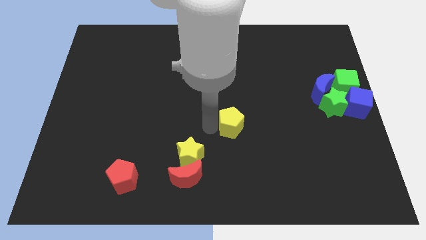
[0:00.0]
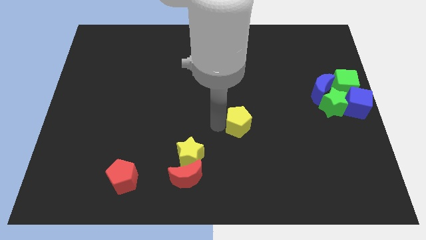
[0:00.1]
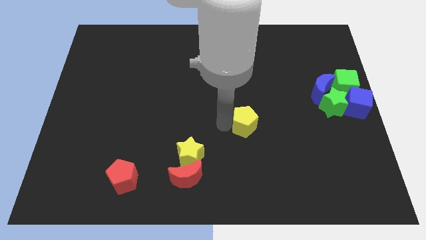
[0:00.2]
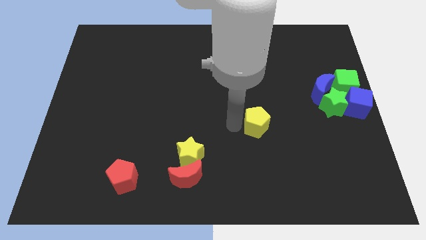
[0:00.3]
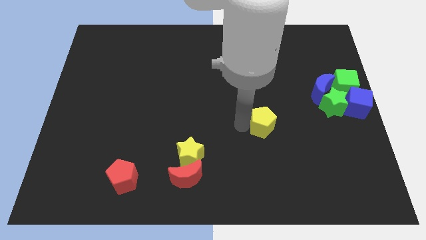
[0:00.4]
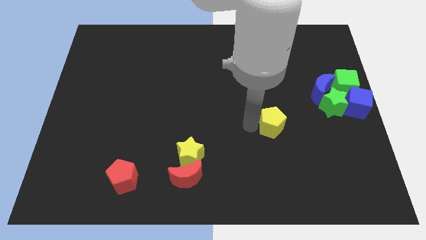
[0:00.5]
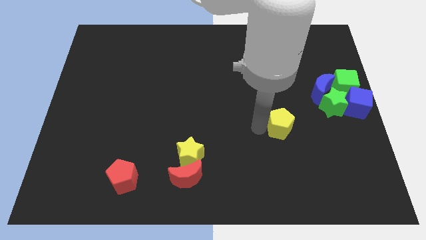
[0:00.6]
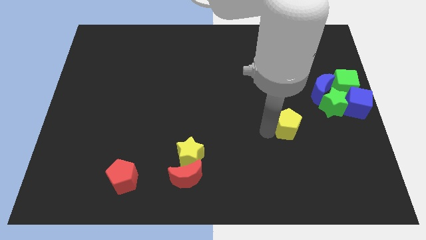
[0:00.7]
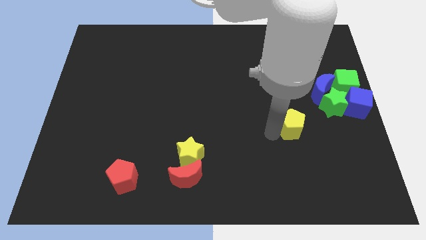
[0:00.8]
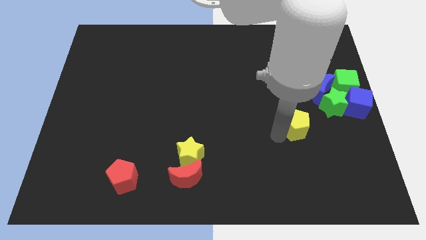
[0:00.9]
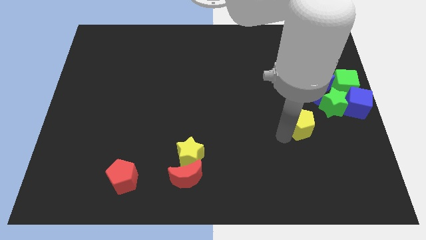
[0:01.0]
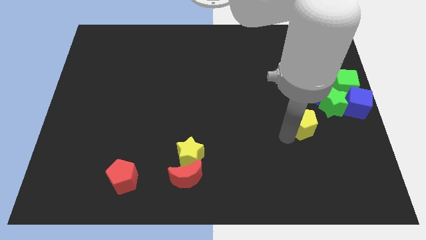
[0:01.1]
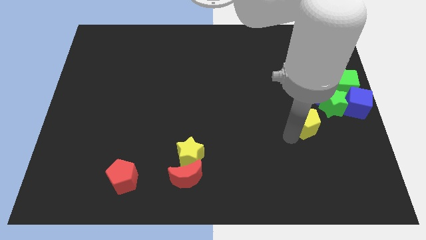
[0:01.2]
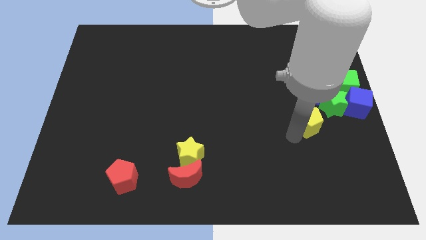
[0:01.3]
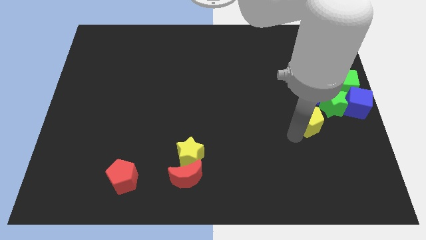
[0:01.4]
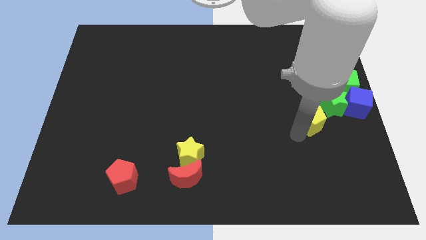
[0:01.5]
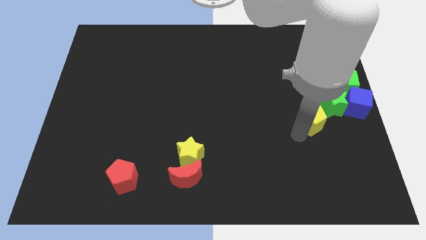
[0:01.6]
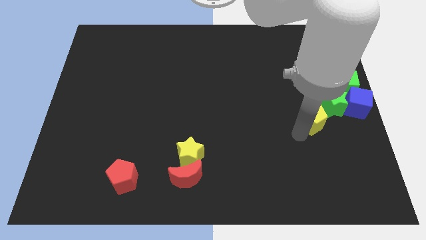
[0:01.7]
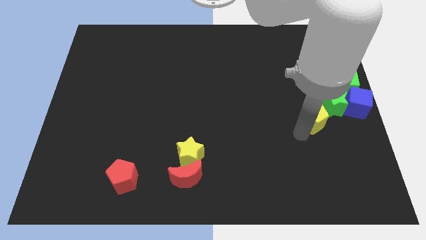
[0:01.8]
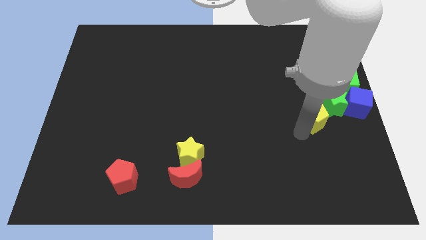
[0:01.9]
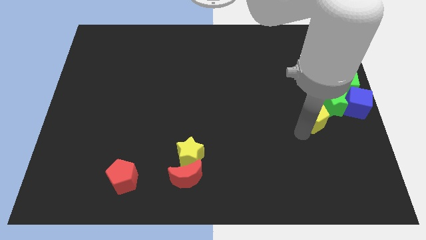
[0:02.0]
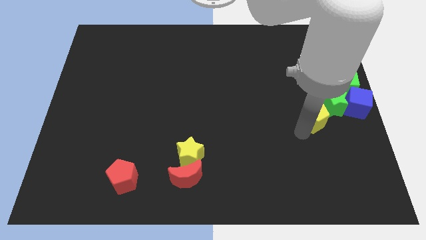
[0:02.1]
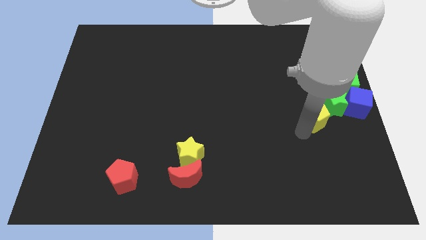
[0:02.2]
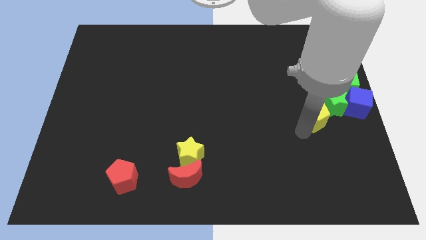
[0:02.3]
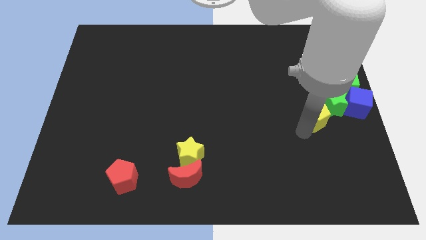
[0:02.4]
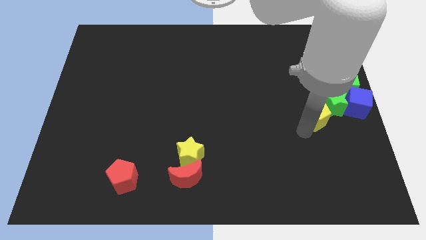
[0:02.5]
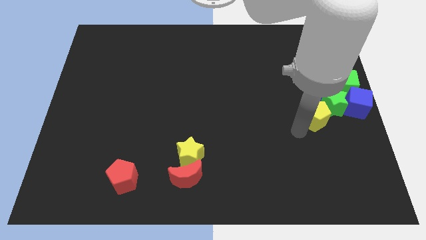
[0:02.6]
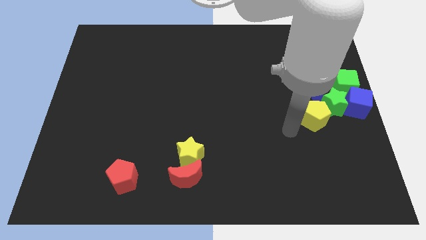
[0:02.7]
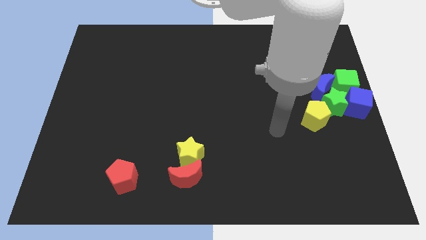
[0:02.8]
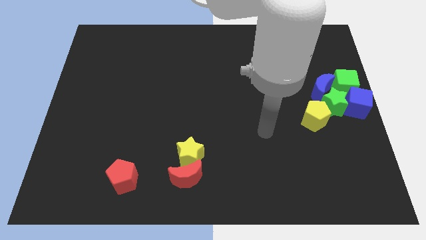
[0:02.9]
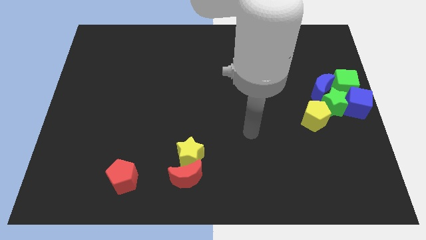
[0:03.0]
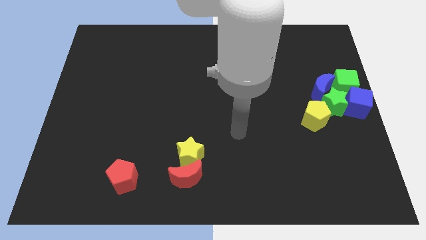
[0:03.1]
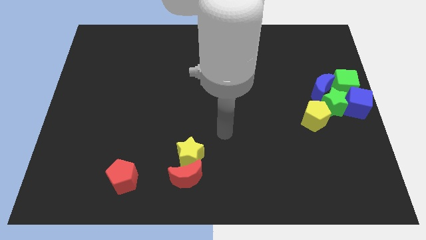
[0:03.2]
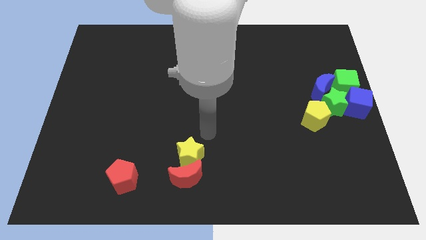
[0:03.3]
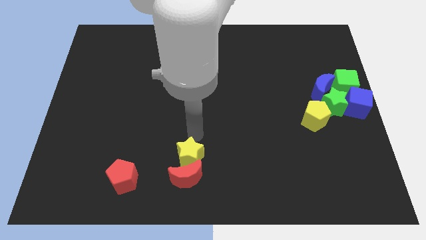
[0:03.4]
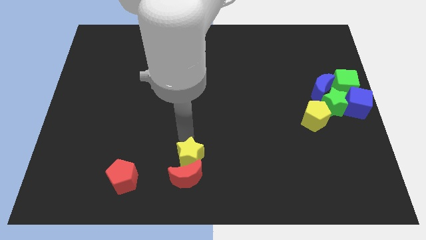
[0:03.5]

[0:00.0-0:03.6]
place the yellow pentagon to the bottom of the green star

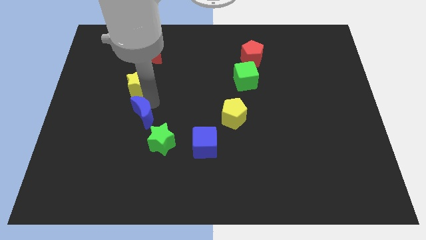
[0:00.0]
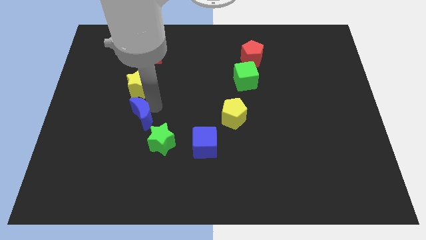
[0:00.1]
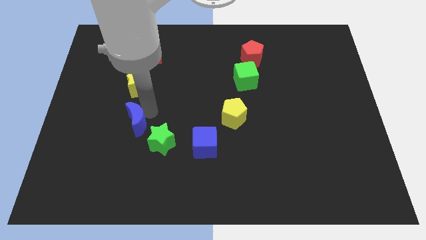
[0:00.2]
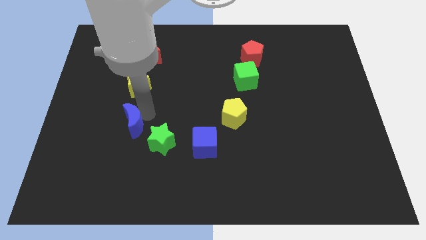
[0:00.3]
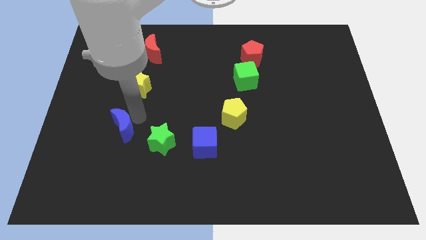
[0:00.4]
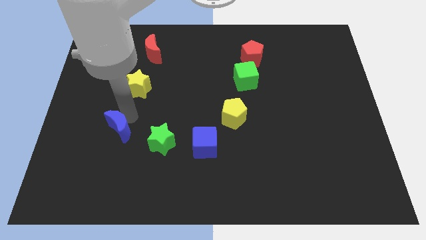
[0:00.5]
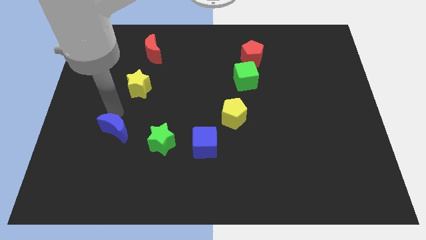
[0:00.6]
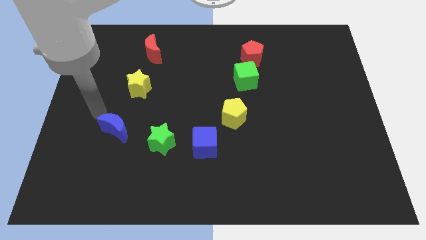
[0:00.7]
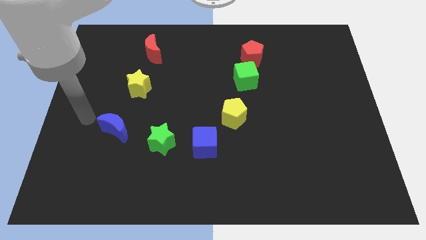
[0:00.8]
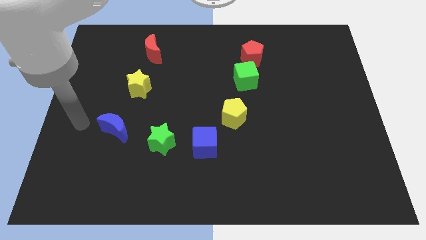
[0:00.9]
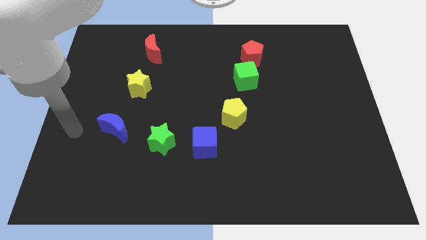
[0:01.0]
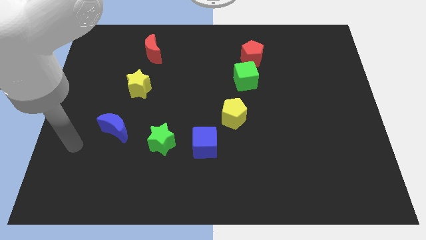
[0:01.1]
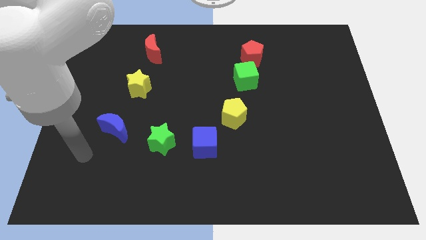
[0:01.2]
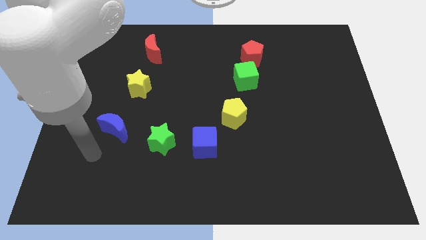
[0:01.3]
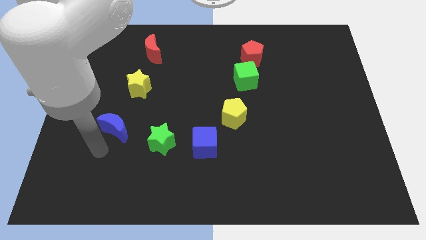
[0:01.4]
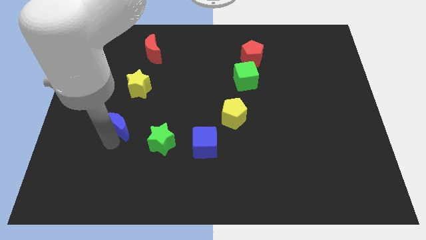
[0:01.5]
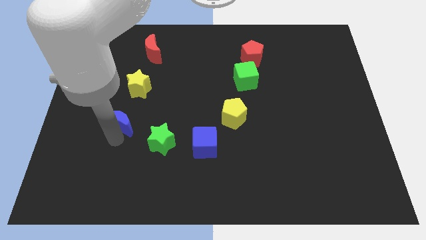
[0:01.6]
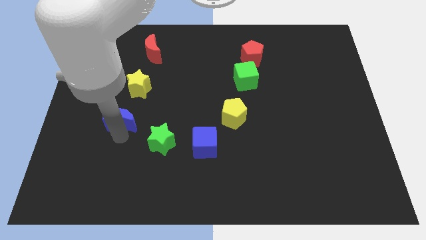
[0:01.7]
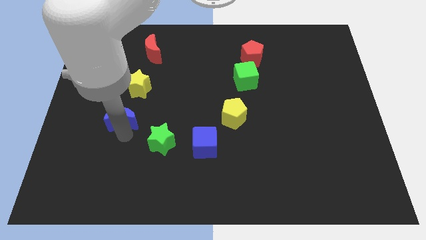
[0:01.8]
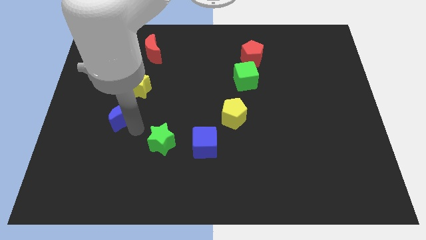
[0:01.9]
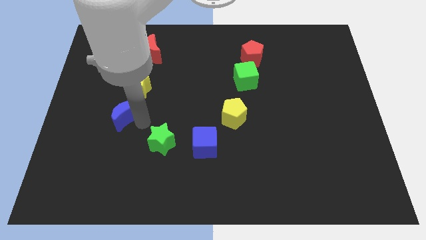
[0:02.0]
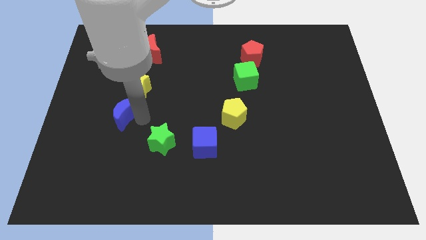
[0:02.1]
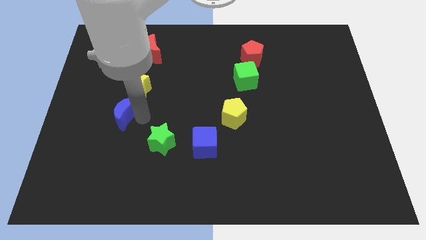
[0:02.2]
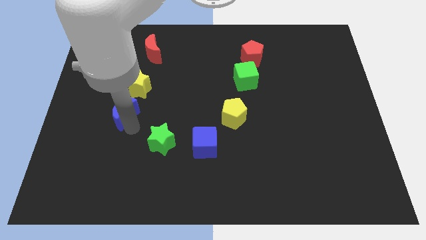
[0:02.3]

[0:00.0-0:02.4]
push the blue crescent slightly to the bottom of the yellow star

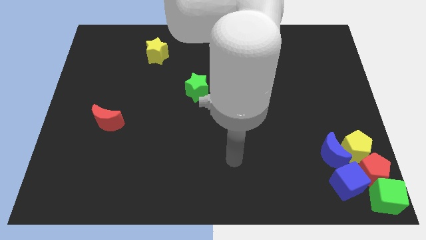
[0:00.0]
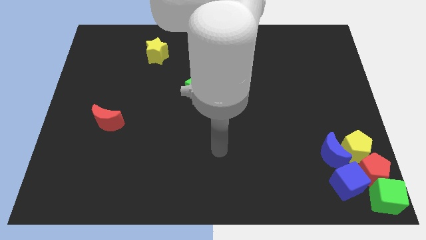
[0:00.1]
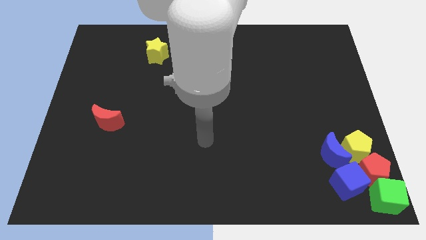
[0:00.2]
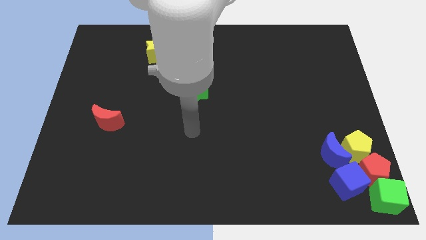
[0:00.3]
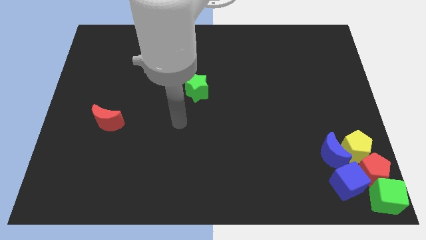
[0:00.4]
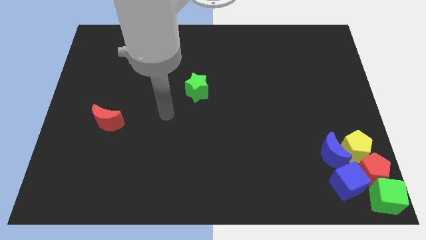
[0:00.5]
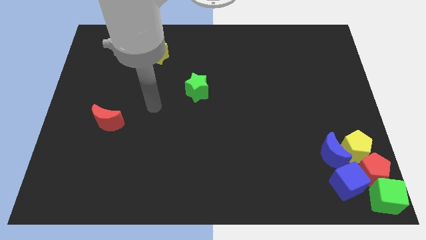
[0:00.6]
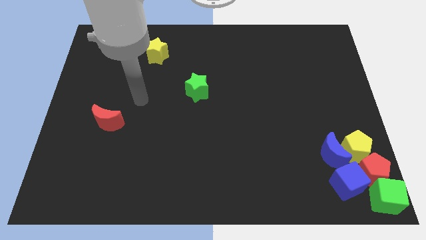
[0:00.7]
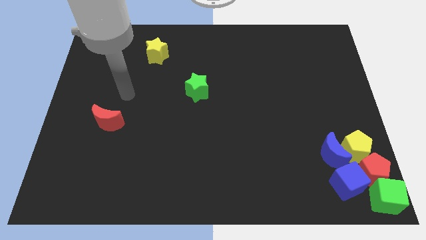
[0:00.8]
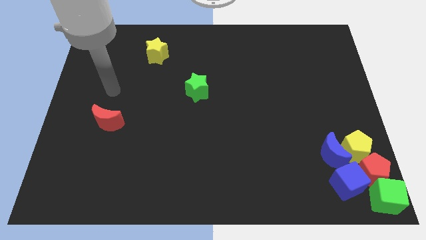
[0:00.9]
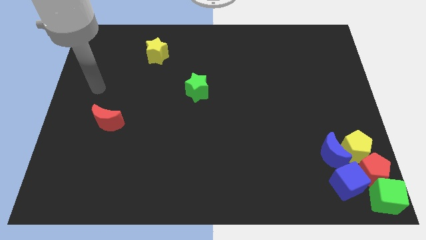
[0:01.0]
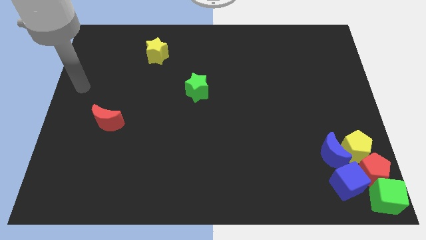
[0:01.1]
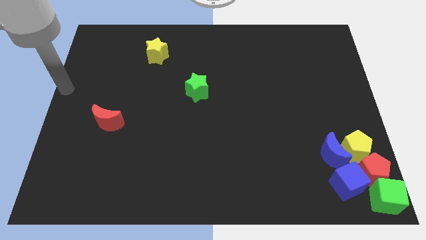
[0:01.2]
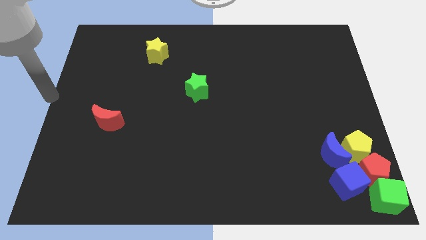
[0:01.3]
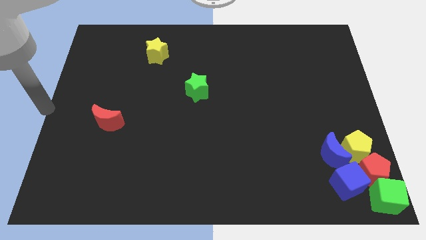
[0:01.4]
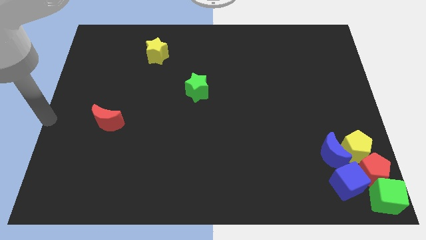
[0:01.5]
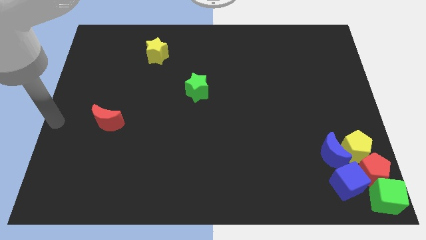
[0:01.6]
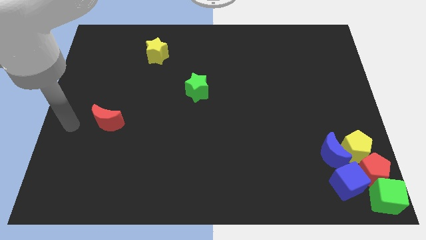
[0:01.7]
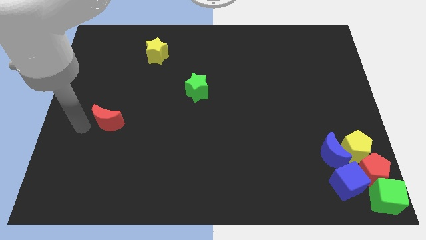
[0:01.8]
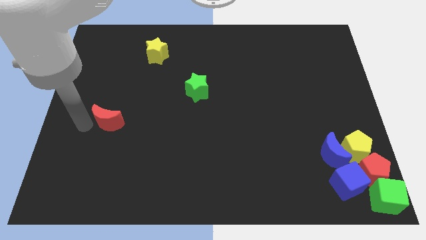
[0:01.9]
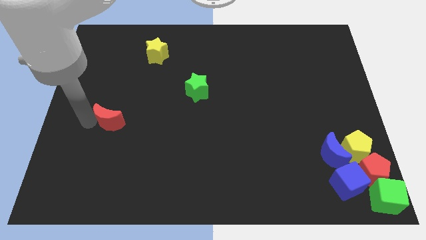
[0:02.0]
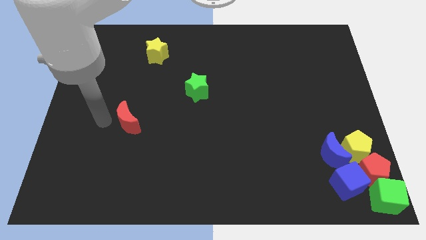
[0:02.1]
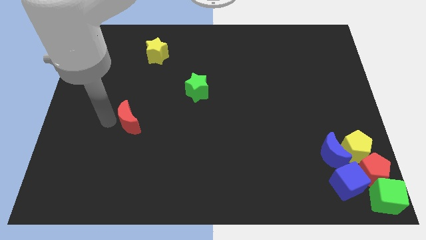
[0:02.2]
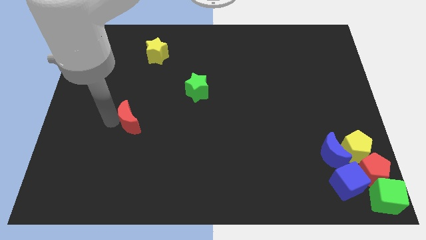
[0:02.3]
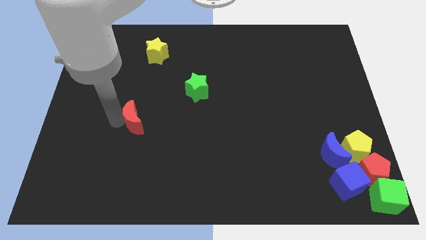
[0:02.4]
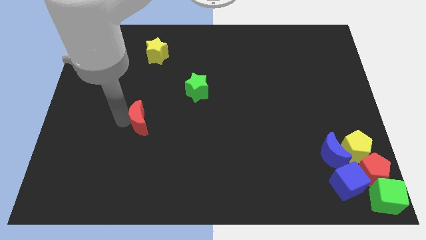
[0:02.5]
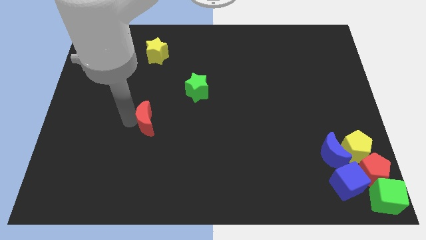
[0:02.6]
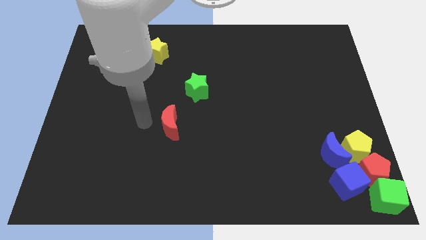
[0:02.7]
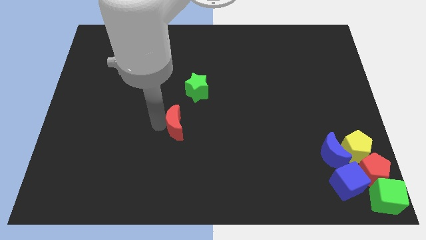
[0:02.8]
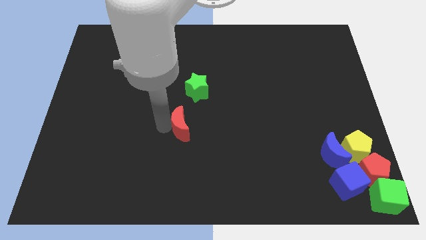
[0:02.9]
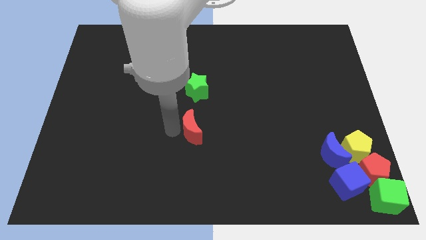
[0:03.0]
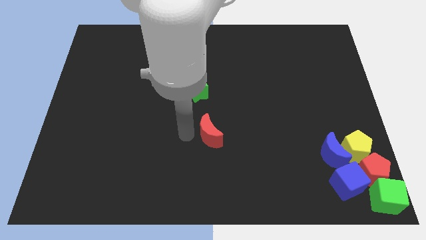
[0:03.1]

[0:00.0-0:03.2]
drag the red moon vertically to the bottom of the green star
